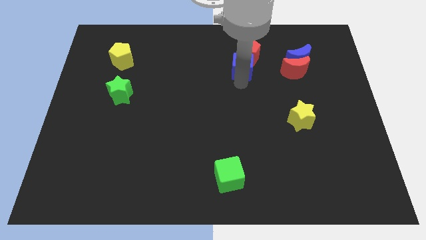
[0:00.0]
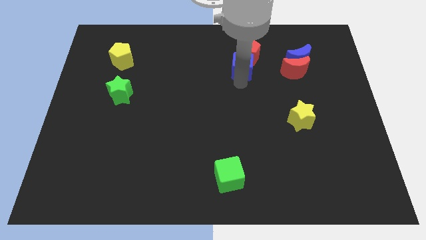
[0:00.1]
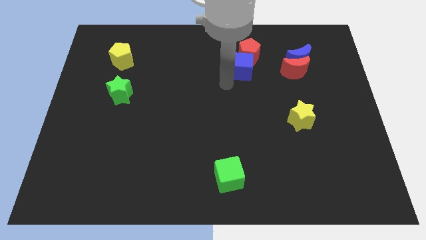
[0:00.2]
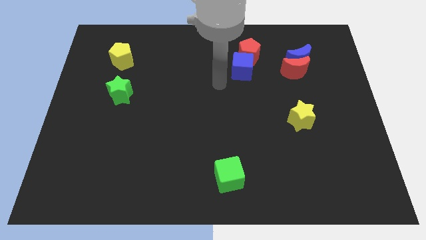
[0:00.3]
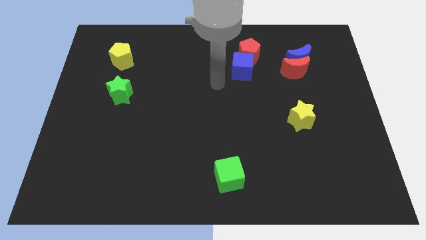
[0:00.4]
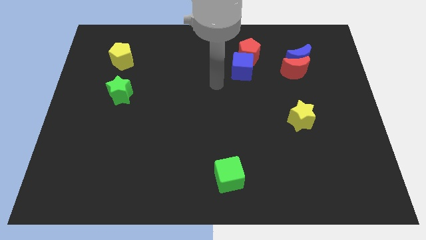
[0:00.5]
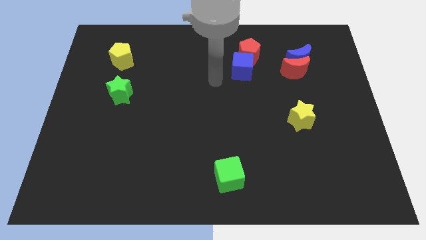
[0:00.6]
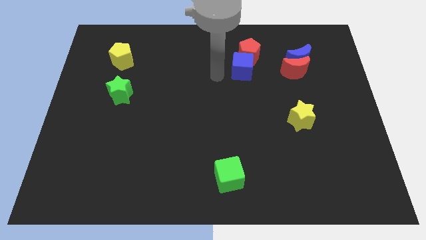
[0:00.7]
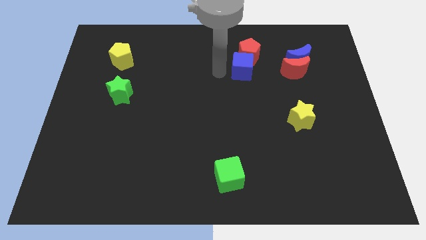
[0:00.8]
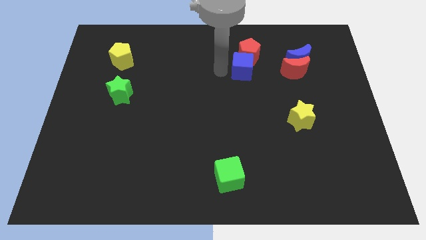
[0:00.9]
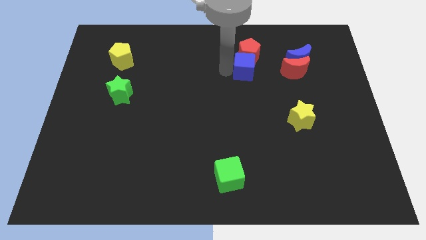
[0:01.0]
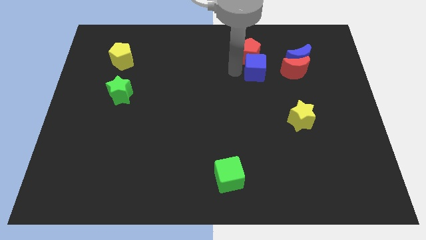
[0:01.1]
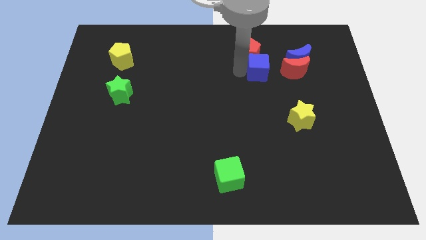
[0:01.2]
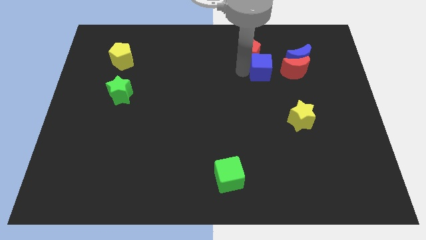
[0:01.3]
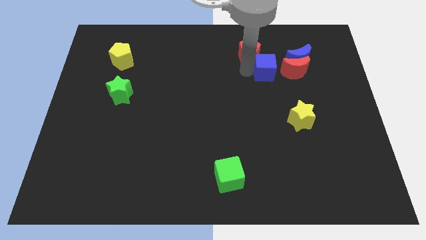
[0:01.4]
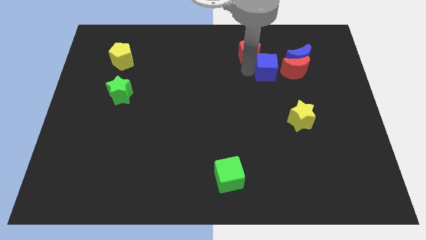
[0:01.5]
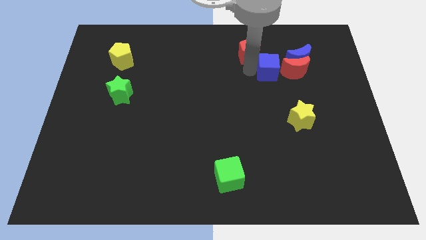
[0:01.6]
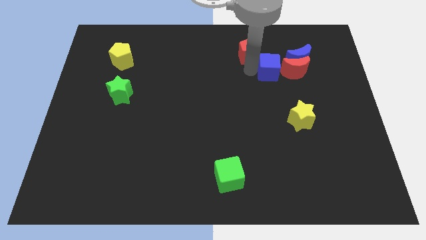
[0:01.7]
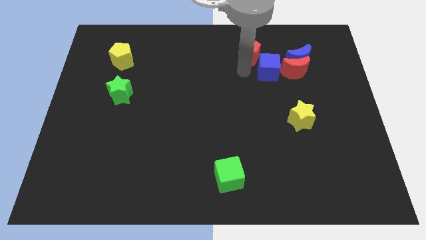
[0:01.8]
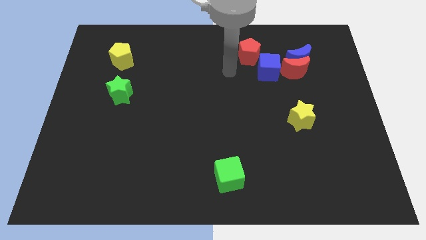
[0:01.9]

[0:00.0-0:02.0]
push the blue cube left to the red moon

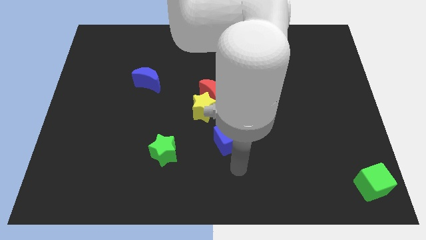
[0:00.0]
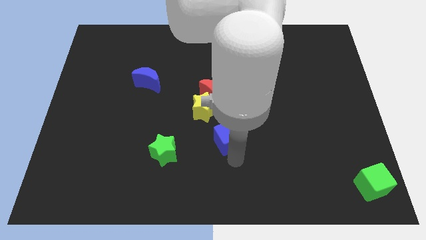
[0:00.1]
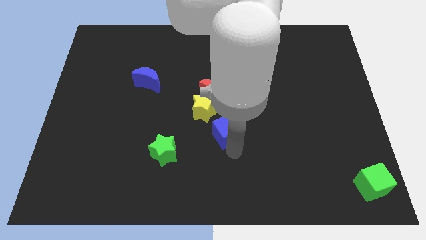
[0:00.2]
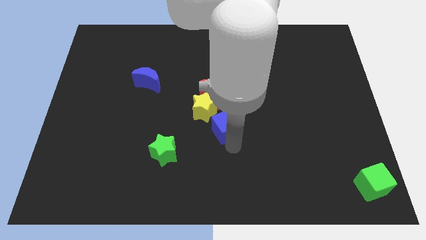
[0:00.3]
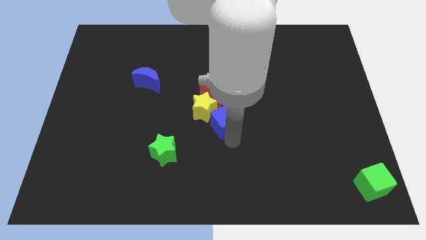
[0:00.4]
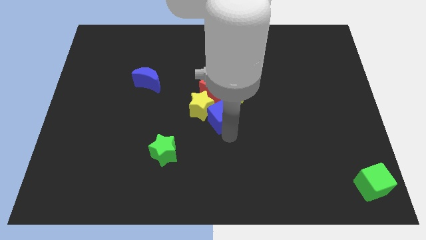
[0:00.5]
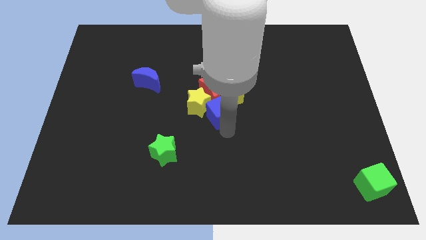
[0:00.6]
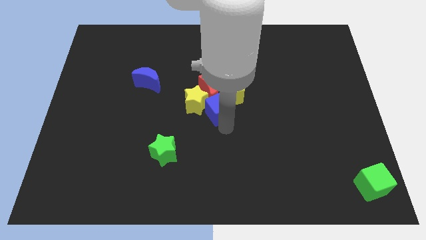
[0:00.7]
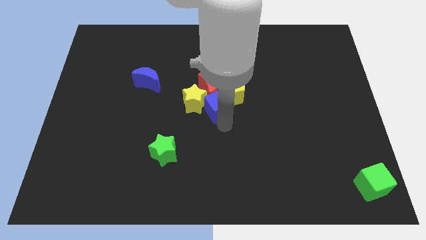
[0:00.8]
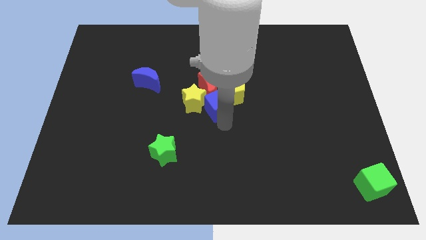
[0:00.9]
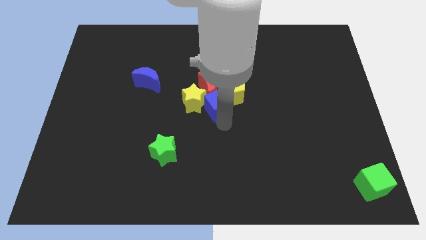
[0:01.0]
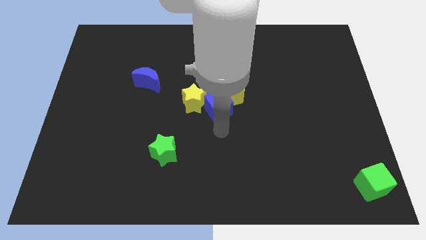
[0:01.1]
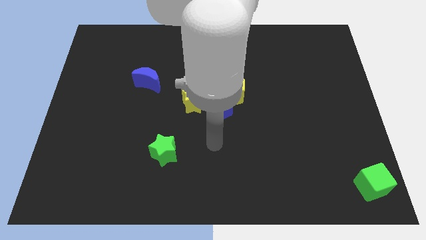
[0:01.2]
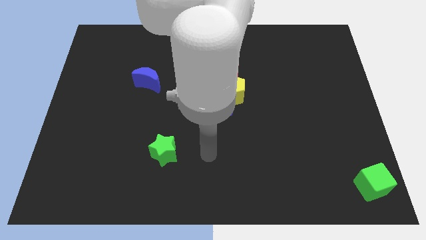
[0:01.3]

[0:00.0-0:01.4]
push the blue cube yellow star and red moon towards the center of the board

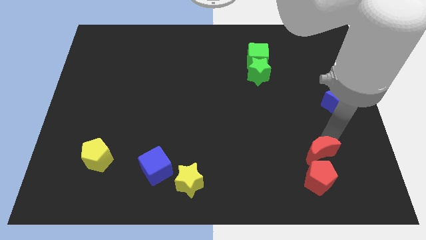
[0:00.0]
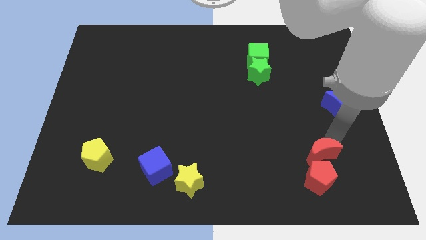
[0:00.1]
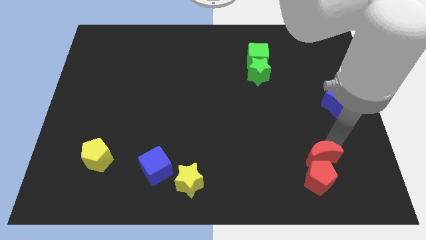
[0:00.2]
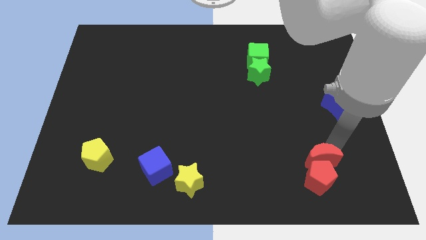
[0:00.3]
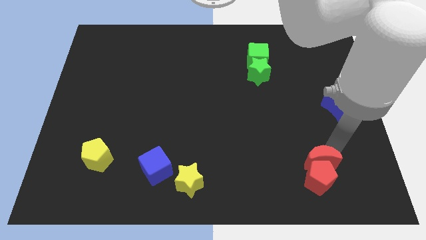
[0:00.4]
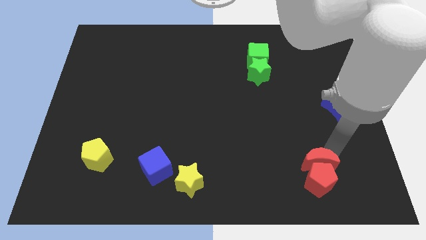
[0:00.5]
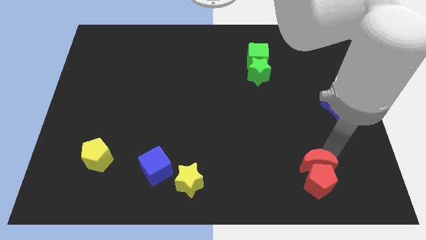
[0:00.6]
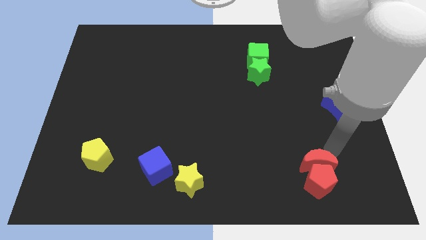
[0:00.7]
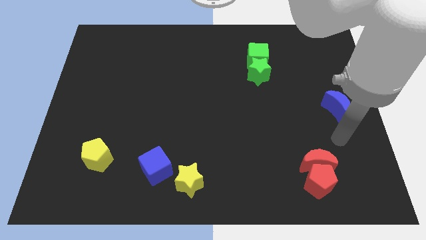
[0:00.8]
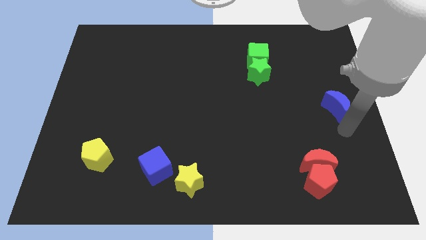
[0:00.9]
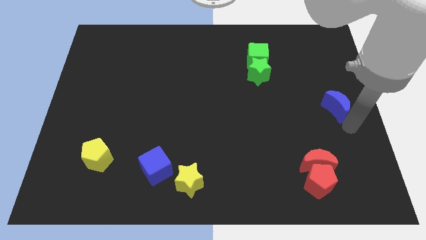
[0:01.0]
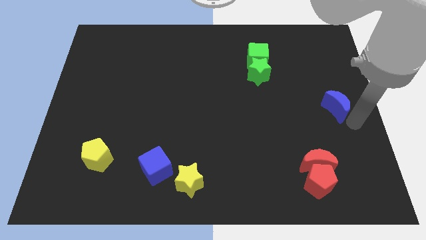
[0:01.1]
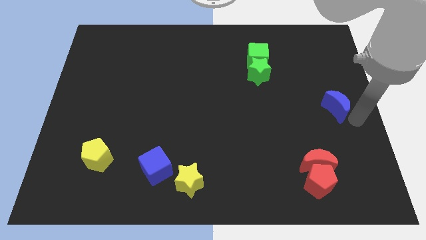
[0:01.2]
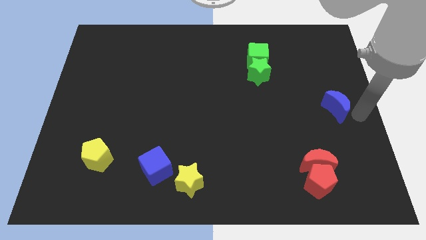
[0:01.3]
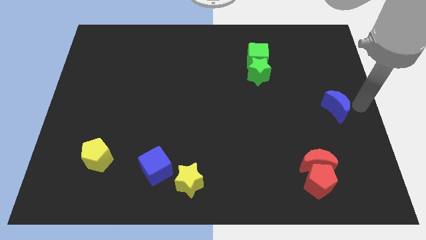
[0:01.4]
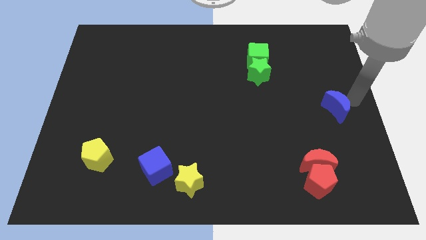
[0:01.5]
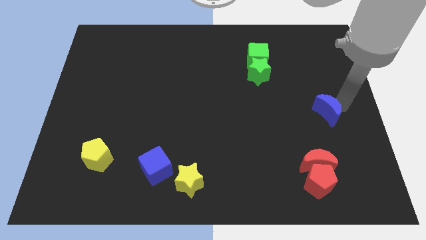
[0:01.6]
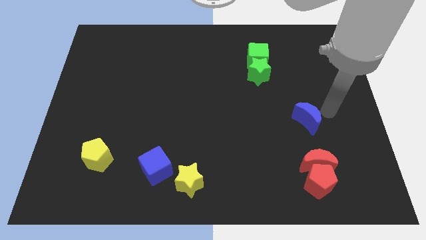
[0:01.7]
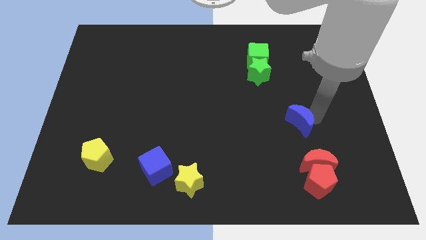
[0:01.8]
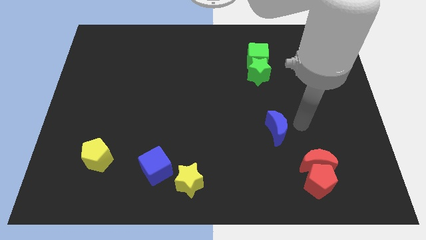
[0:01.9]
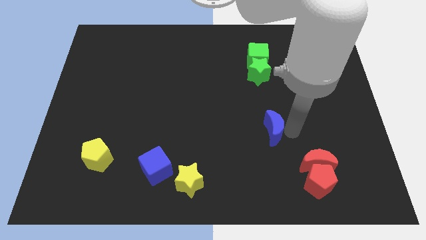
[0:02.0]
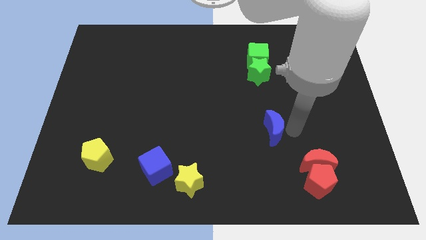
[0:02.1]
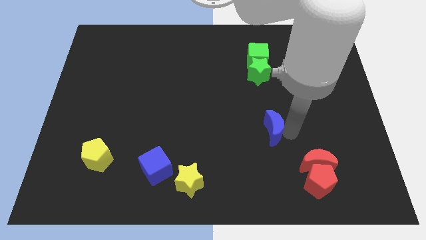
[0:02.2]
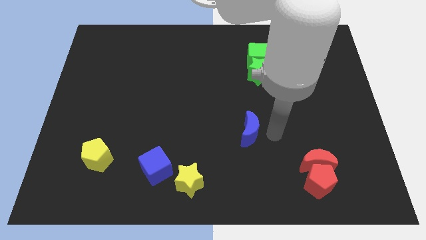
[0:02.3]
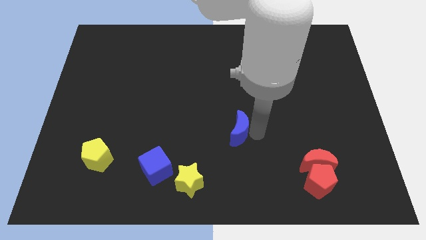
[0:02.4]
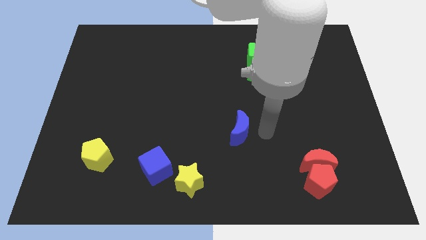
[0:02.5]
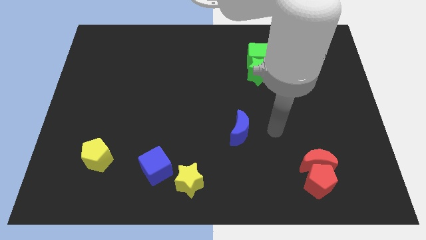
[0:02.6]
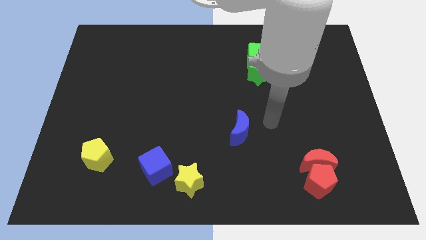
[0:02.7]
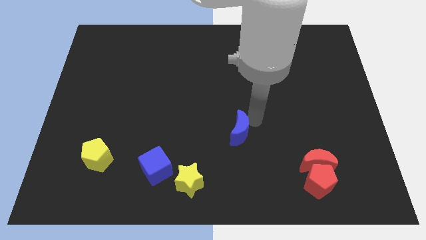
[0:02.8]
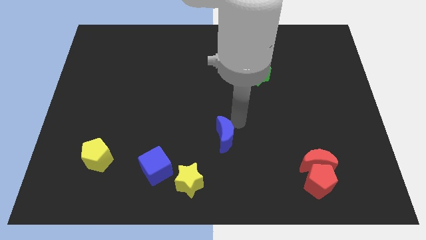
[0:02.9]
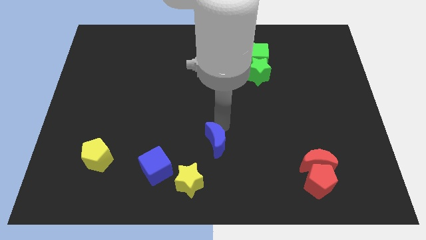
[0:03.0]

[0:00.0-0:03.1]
move blue crescent slightly towards the yellow star

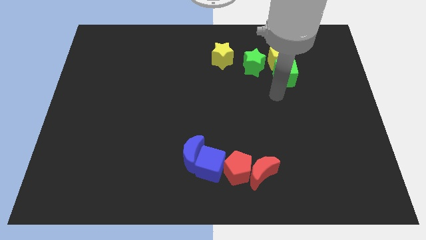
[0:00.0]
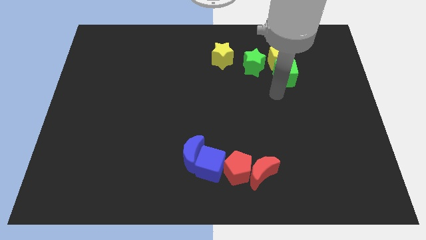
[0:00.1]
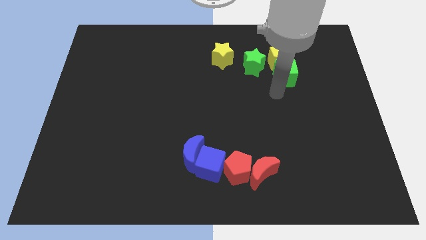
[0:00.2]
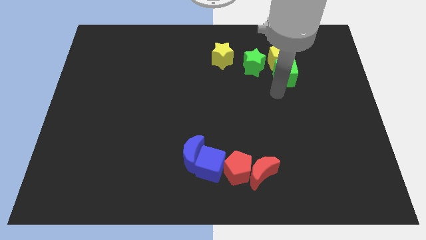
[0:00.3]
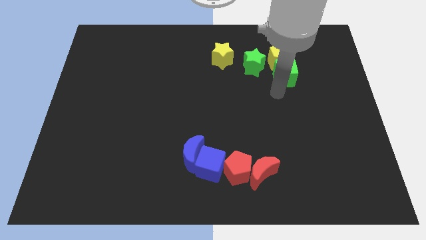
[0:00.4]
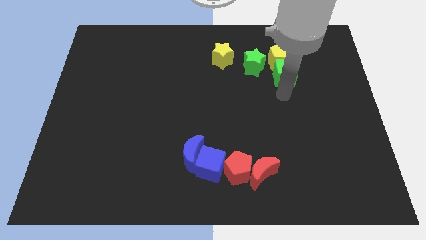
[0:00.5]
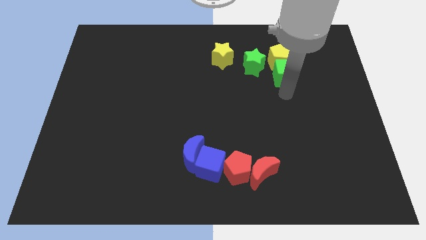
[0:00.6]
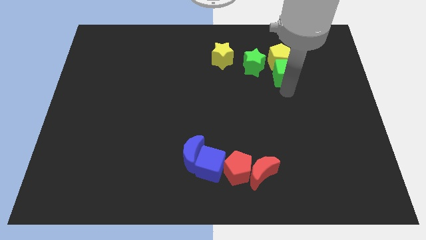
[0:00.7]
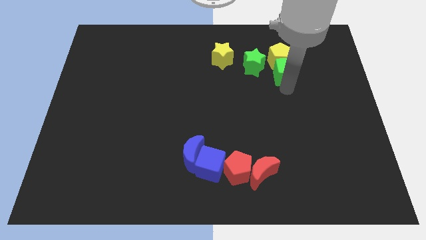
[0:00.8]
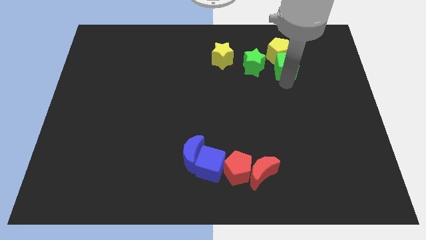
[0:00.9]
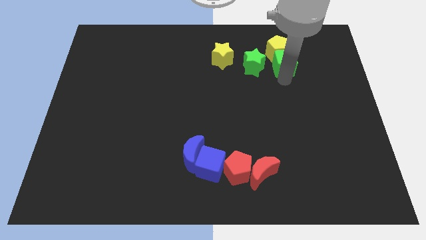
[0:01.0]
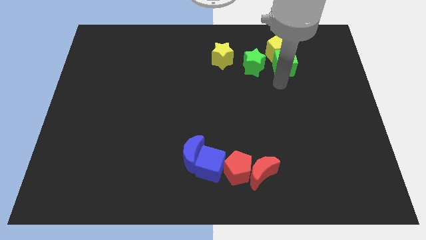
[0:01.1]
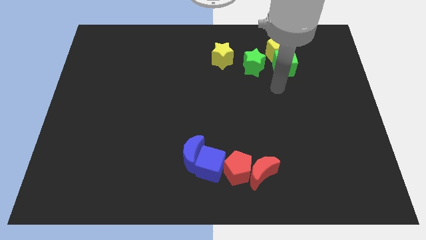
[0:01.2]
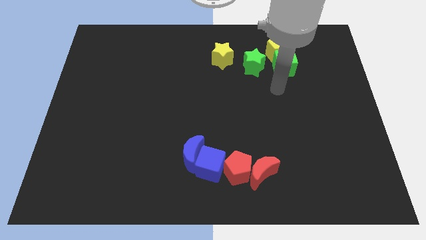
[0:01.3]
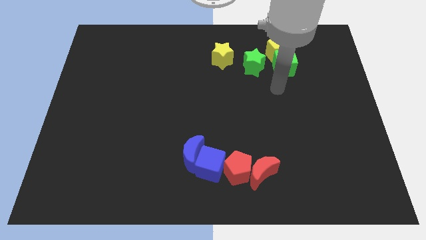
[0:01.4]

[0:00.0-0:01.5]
push the green cube into yellow pentagon towards the top center of the board

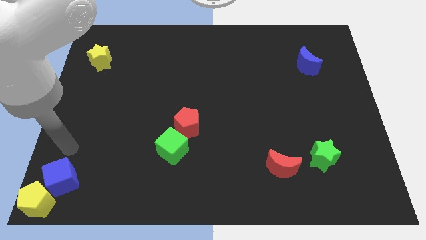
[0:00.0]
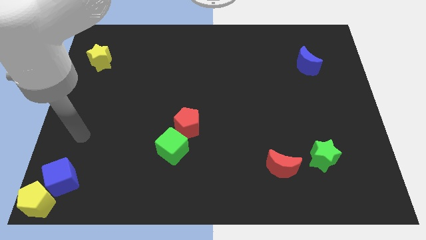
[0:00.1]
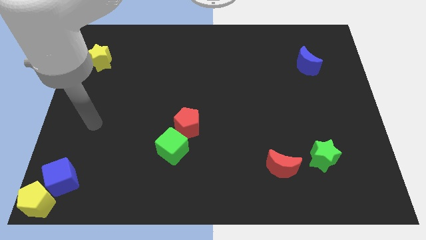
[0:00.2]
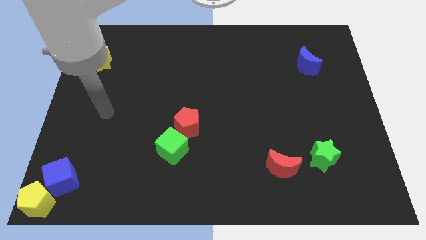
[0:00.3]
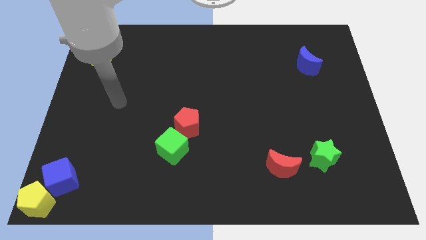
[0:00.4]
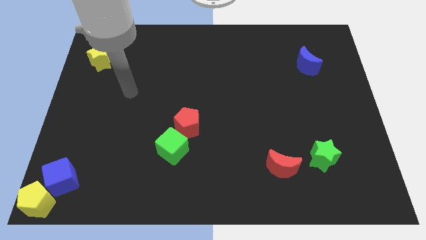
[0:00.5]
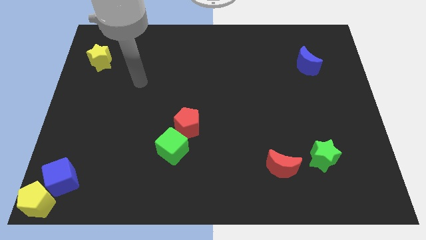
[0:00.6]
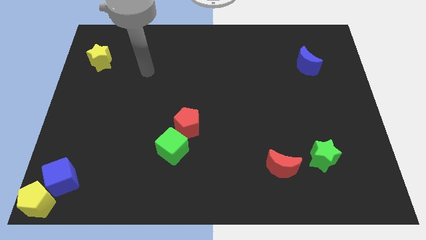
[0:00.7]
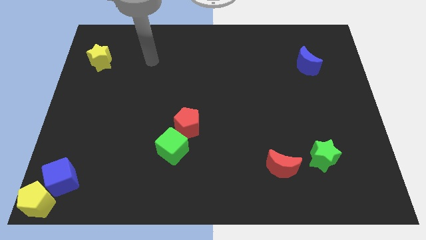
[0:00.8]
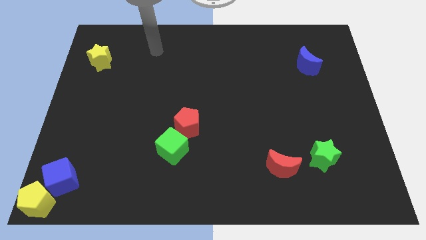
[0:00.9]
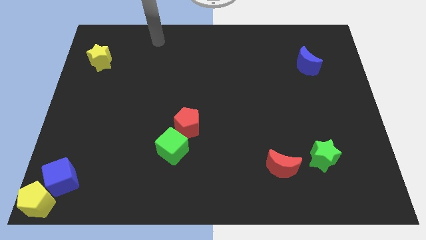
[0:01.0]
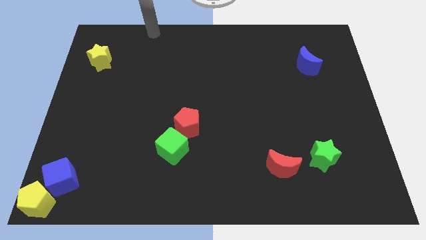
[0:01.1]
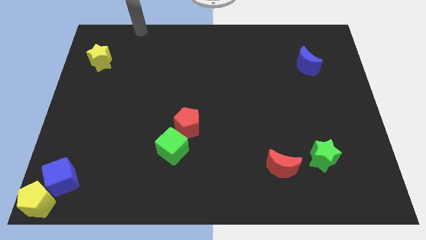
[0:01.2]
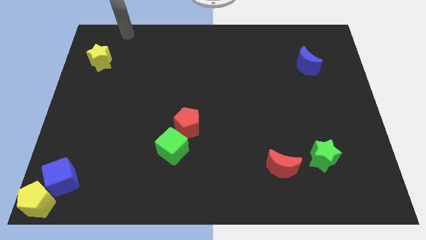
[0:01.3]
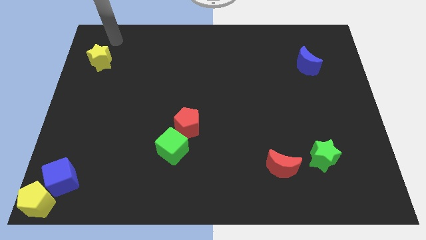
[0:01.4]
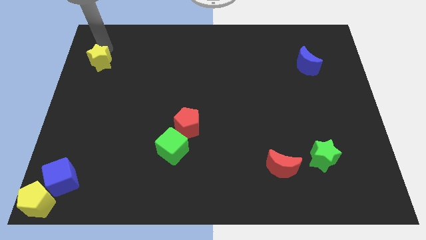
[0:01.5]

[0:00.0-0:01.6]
move your arm to the top of the yellow star
